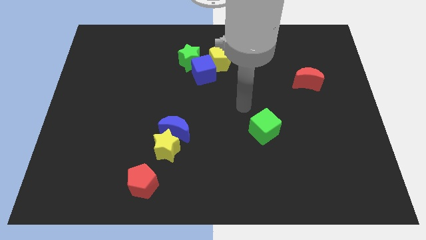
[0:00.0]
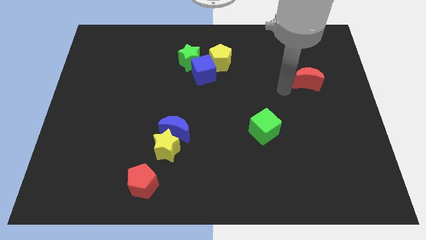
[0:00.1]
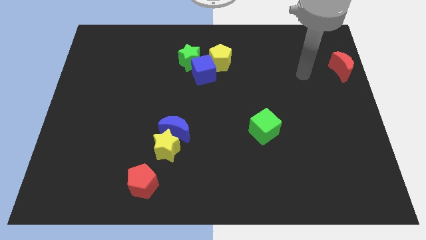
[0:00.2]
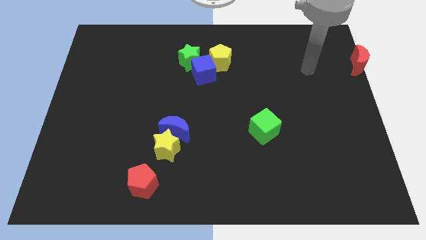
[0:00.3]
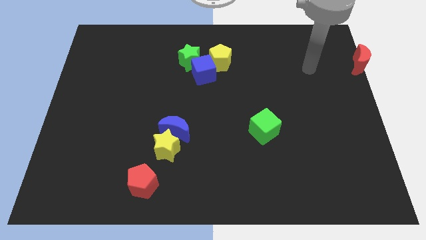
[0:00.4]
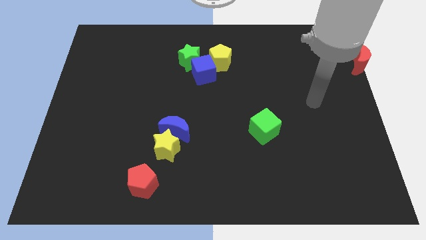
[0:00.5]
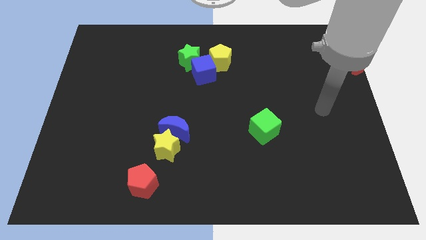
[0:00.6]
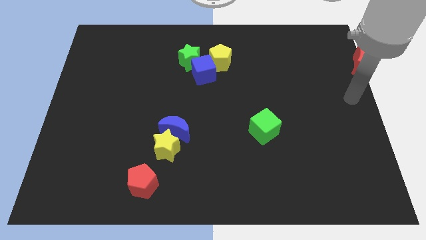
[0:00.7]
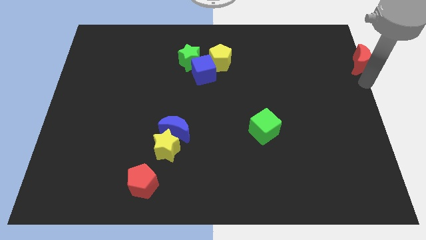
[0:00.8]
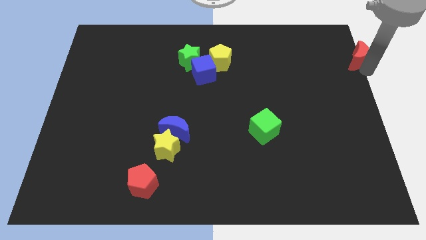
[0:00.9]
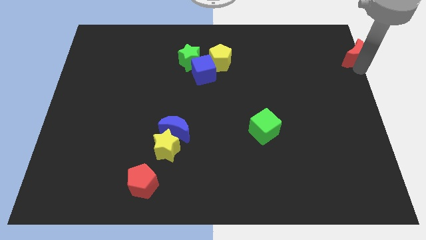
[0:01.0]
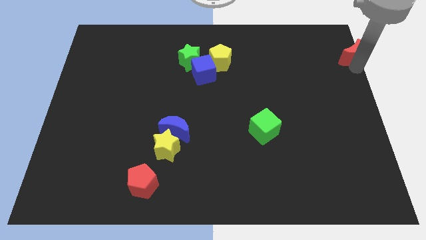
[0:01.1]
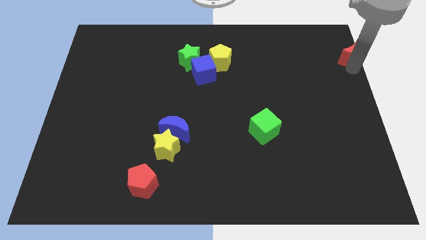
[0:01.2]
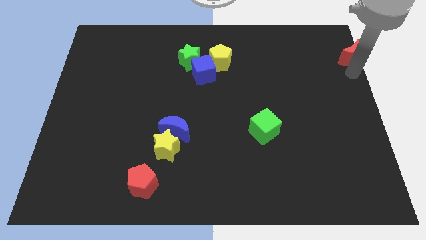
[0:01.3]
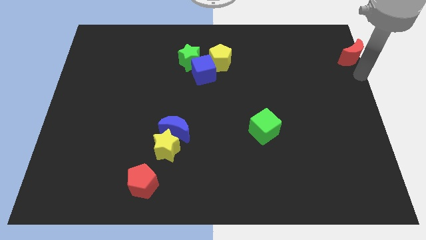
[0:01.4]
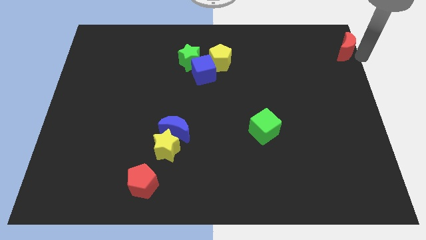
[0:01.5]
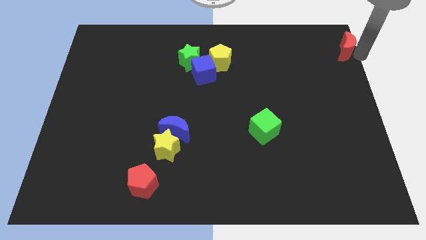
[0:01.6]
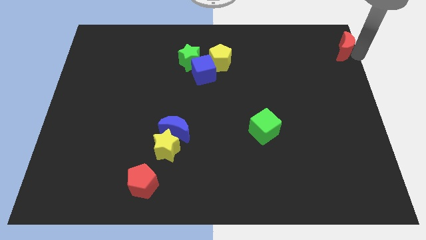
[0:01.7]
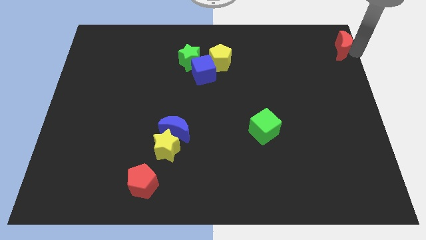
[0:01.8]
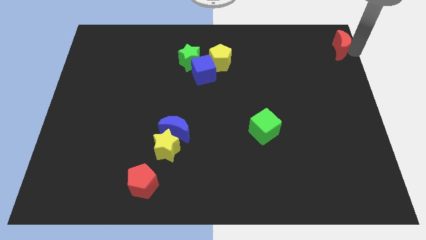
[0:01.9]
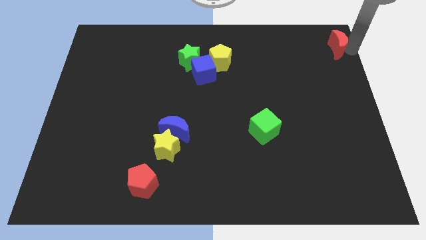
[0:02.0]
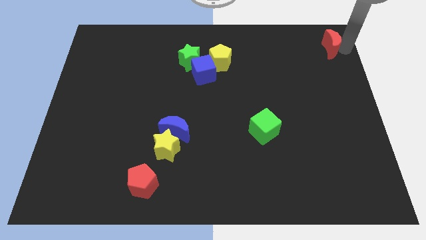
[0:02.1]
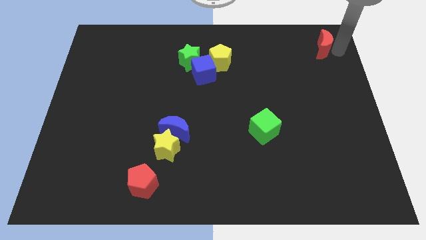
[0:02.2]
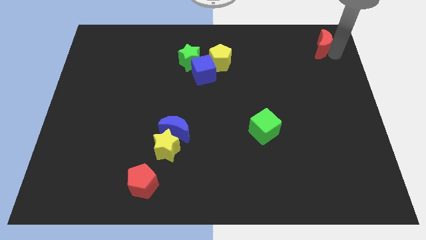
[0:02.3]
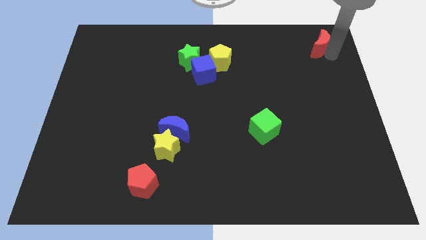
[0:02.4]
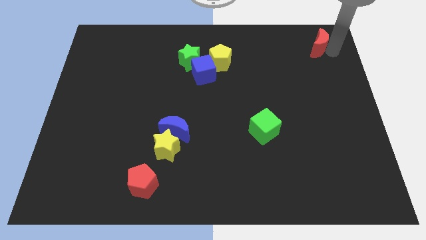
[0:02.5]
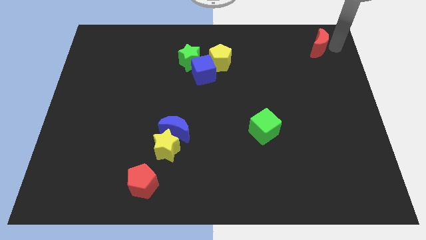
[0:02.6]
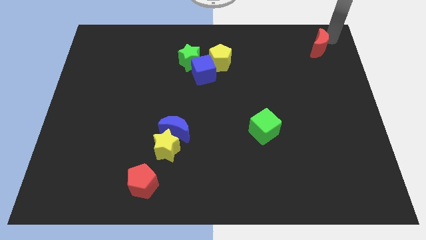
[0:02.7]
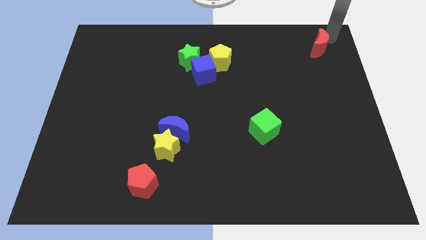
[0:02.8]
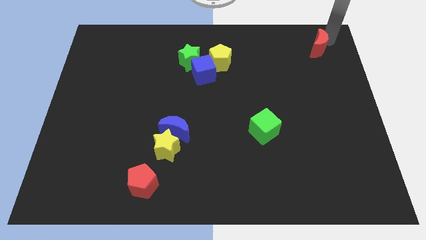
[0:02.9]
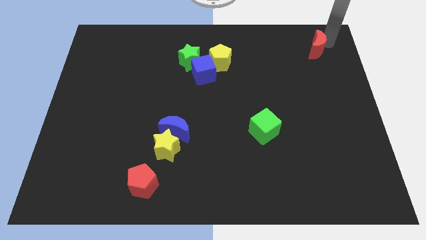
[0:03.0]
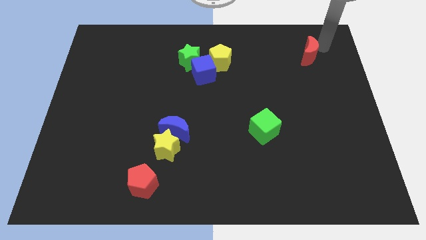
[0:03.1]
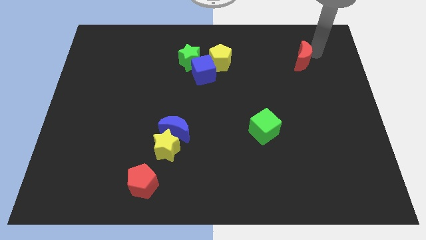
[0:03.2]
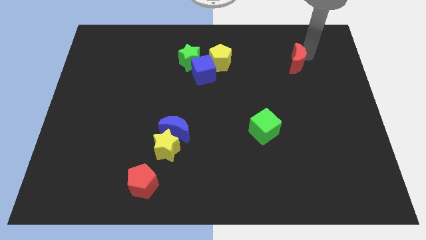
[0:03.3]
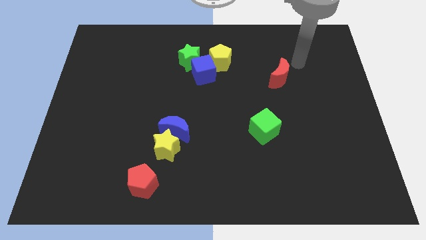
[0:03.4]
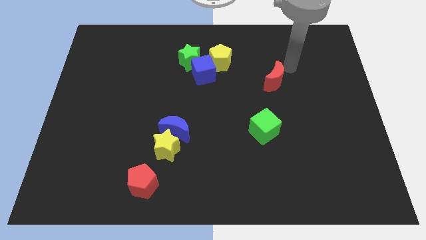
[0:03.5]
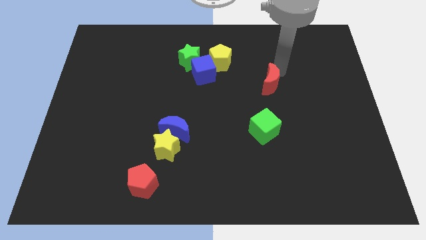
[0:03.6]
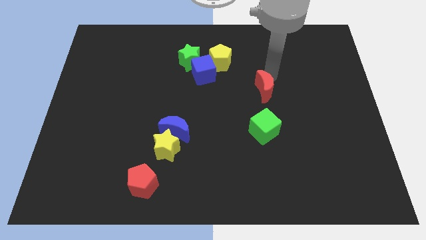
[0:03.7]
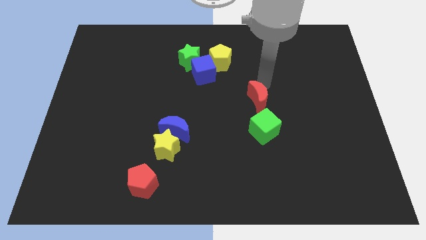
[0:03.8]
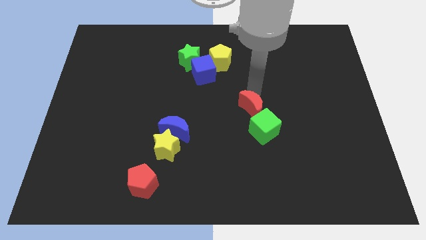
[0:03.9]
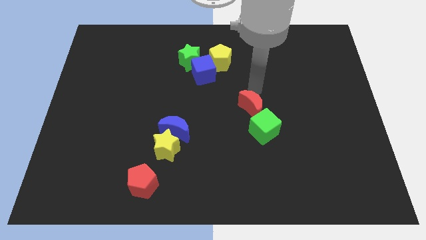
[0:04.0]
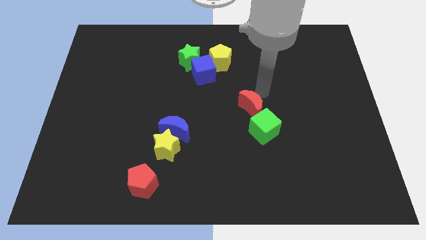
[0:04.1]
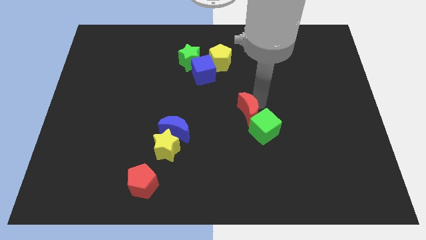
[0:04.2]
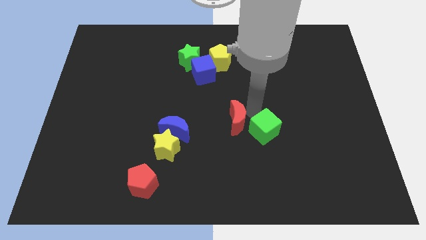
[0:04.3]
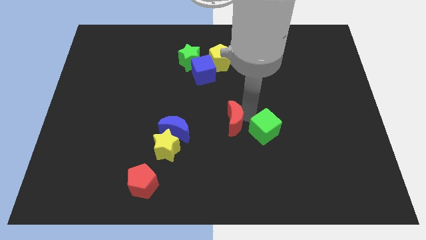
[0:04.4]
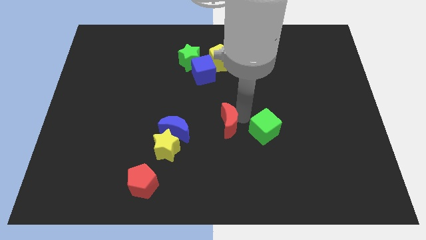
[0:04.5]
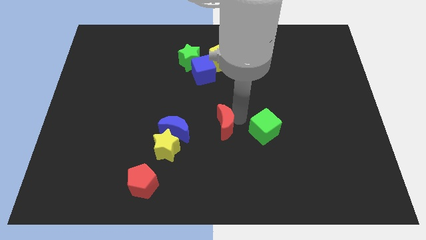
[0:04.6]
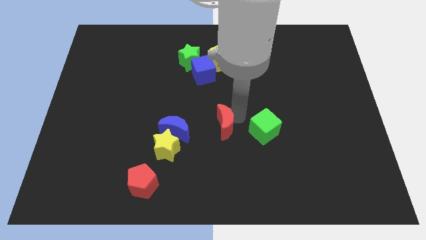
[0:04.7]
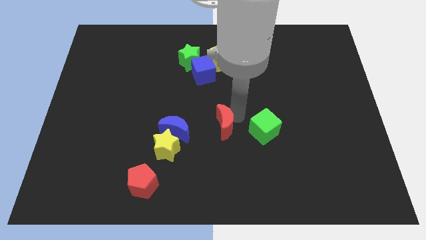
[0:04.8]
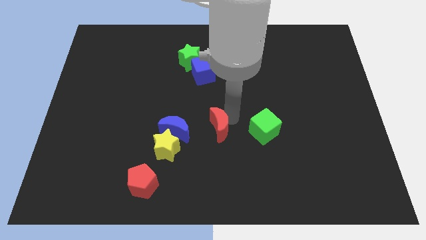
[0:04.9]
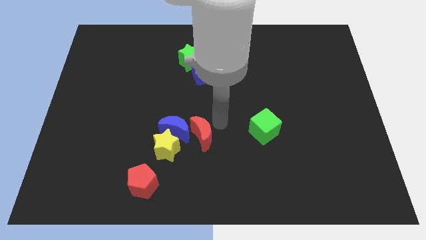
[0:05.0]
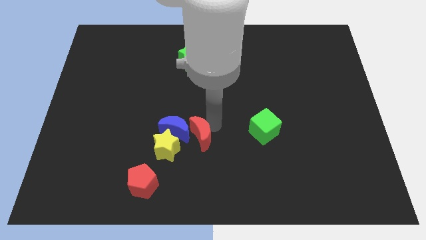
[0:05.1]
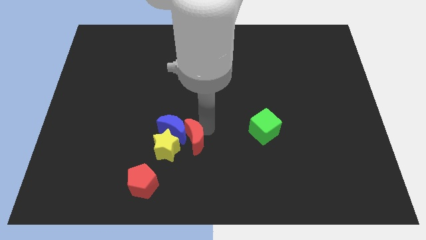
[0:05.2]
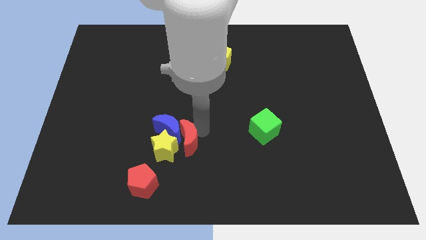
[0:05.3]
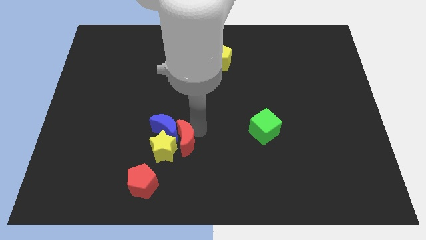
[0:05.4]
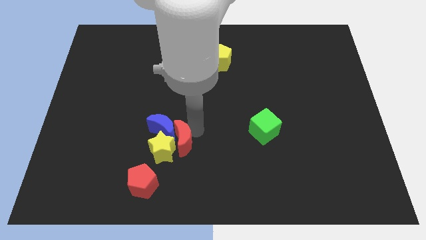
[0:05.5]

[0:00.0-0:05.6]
put the red moon next to the yellow star

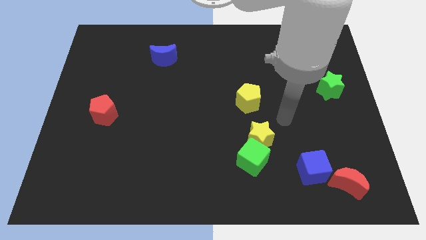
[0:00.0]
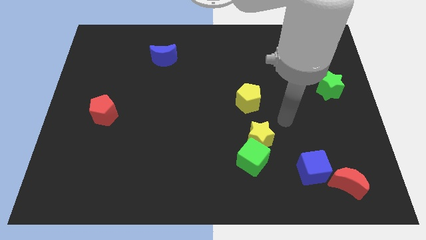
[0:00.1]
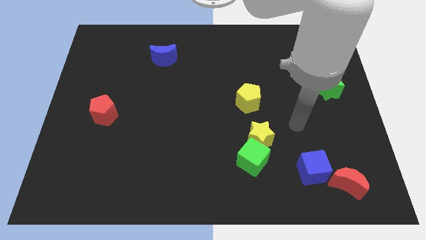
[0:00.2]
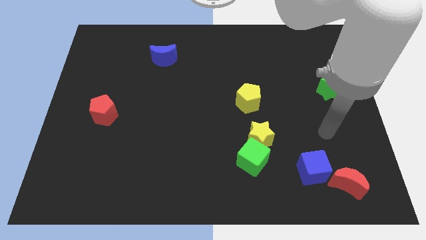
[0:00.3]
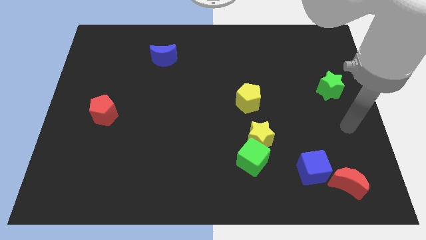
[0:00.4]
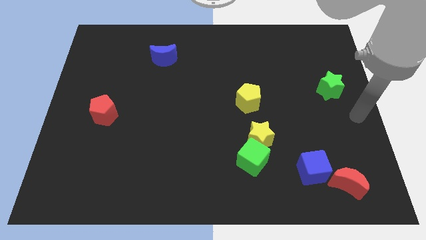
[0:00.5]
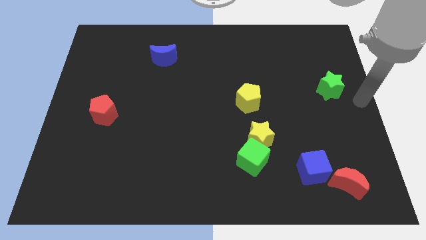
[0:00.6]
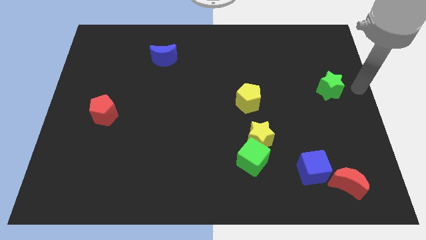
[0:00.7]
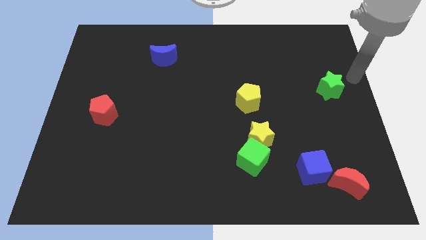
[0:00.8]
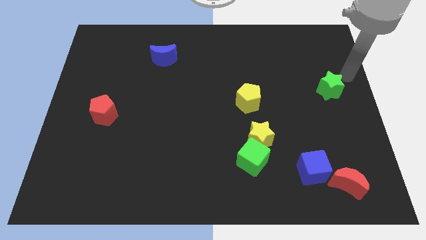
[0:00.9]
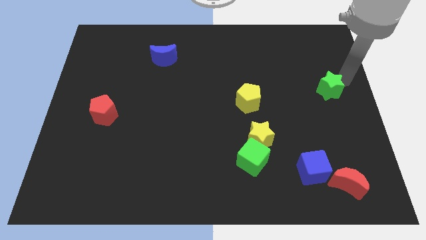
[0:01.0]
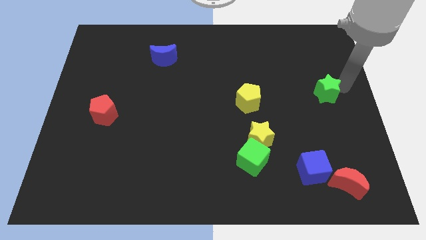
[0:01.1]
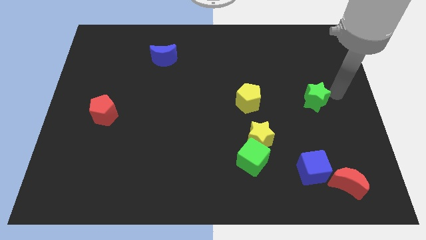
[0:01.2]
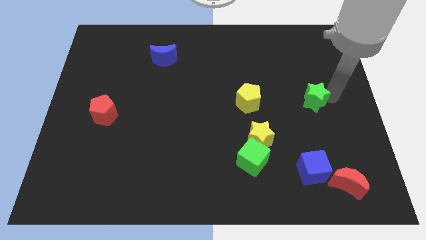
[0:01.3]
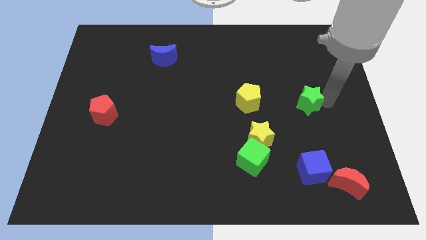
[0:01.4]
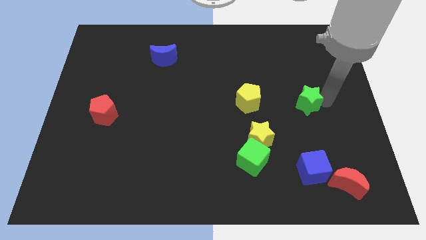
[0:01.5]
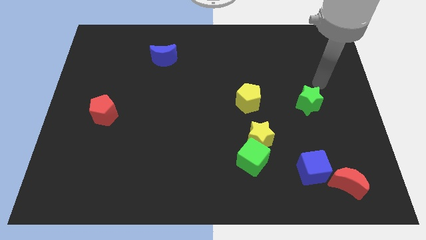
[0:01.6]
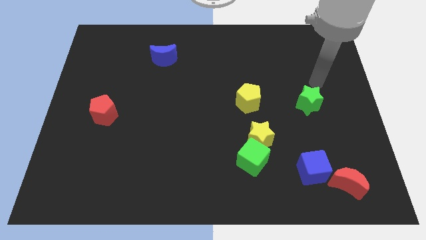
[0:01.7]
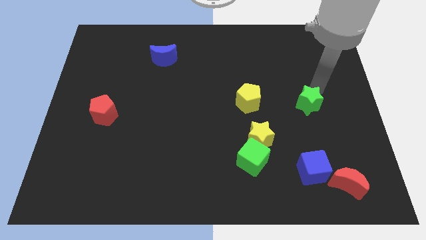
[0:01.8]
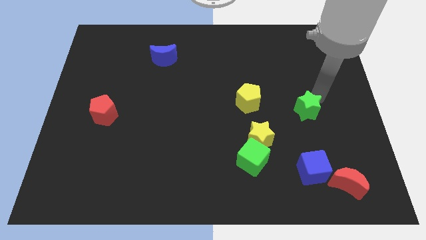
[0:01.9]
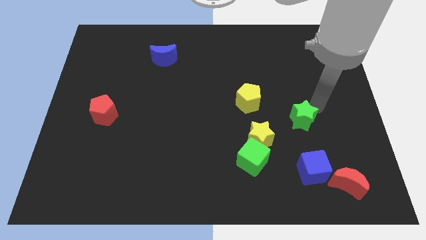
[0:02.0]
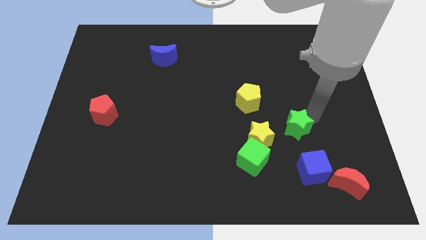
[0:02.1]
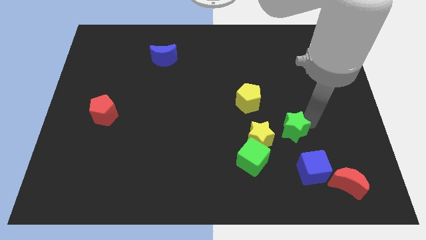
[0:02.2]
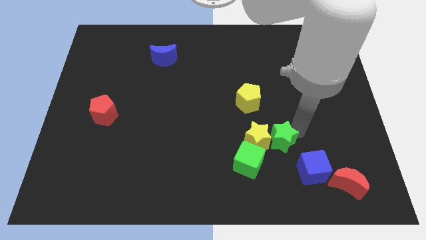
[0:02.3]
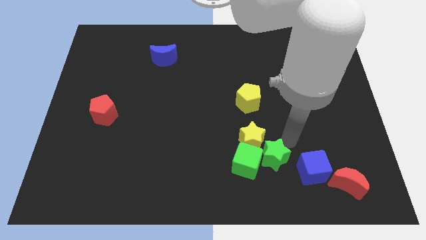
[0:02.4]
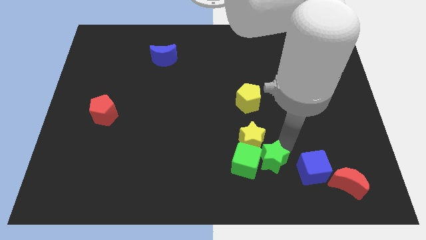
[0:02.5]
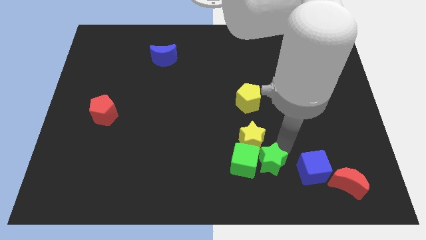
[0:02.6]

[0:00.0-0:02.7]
push the green star towards the green cube

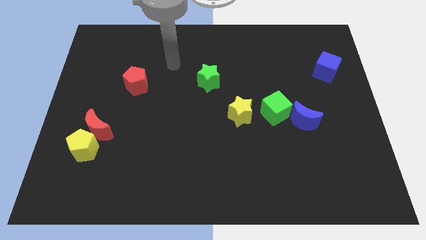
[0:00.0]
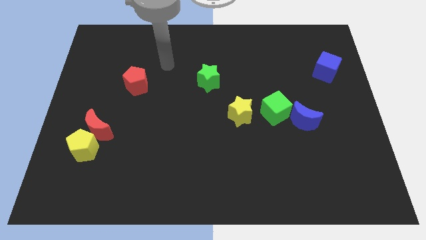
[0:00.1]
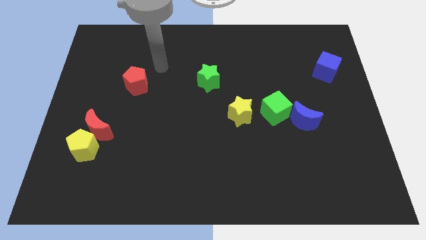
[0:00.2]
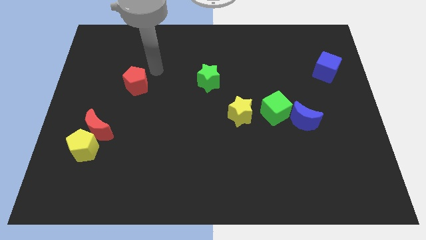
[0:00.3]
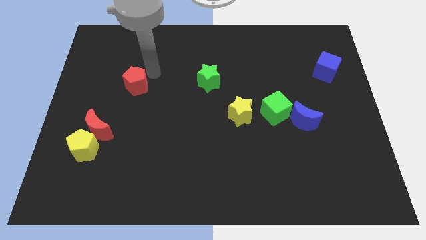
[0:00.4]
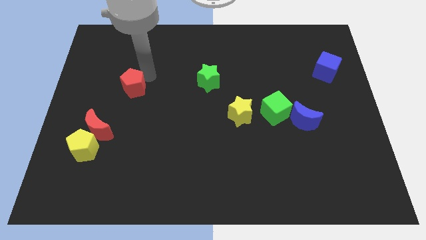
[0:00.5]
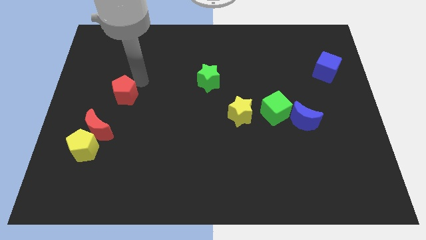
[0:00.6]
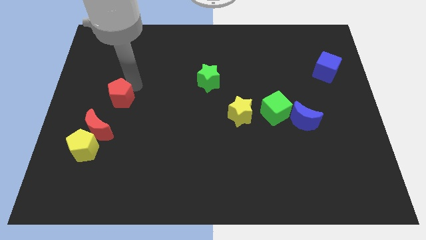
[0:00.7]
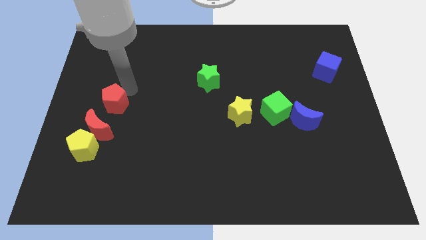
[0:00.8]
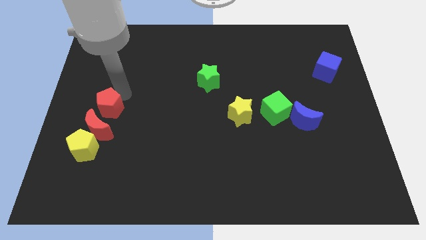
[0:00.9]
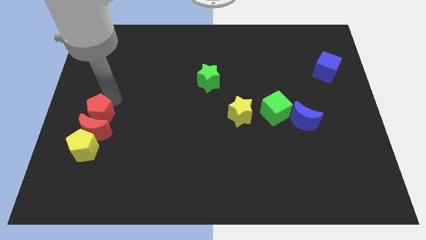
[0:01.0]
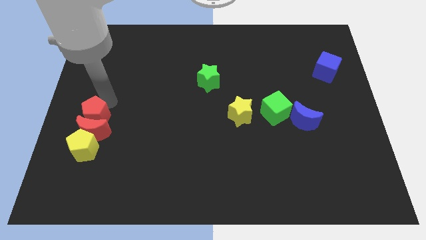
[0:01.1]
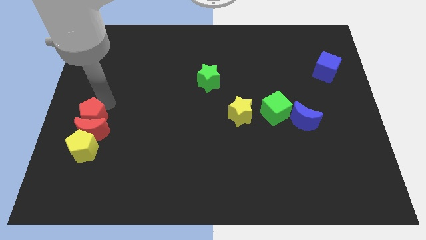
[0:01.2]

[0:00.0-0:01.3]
slide the red pentagon next to the red moon
